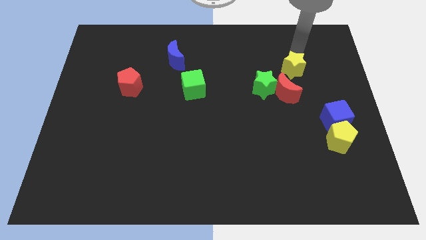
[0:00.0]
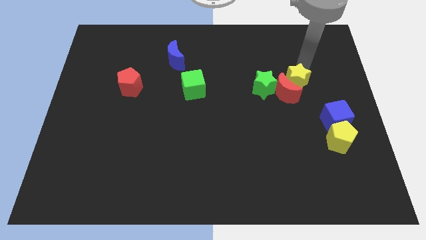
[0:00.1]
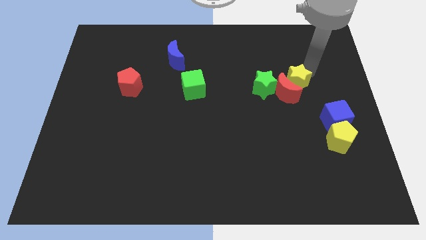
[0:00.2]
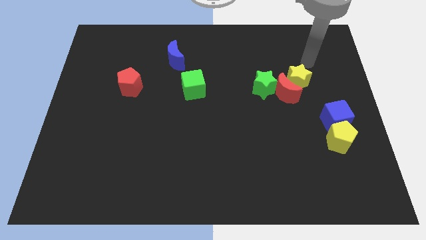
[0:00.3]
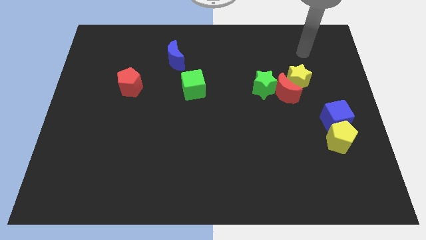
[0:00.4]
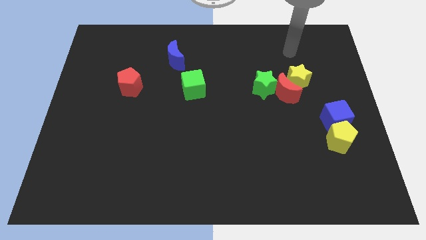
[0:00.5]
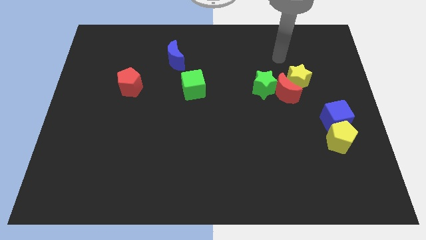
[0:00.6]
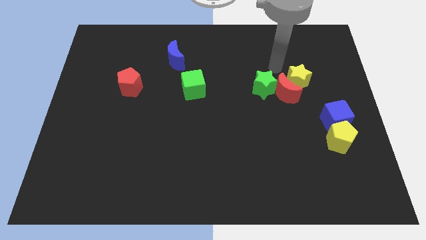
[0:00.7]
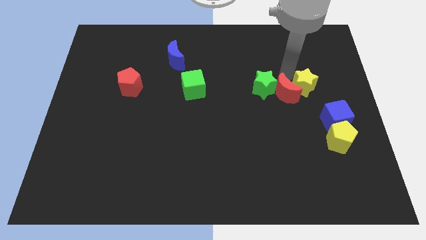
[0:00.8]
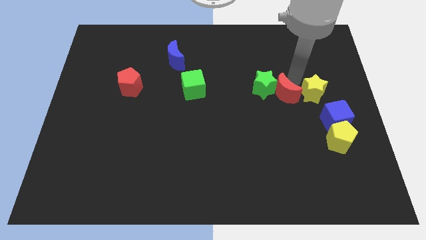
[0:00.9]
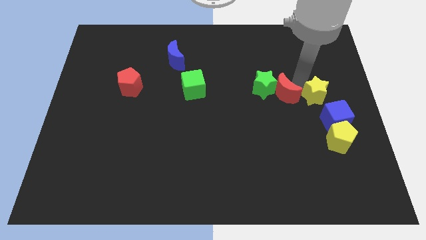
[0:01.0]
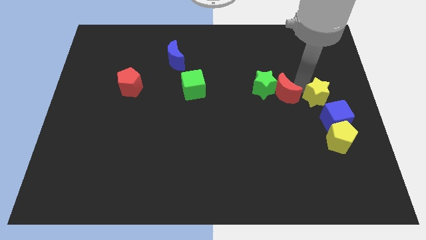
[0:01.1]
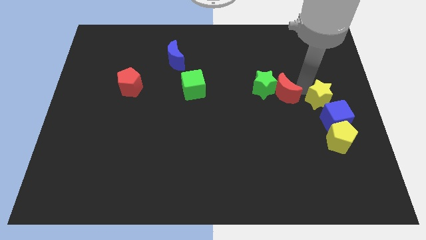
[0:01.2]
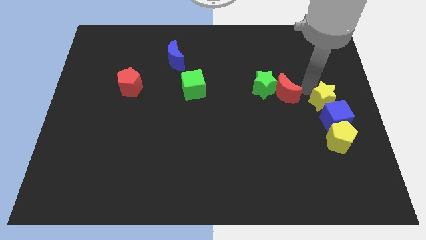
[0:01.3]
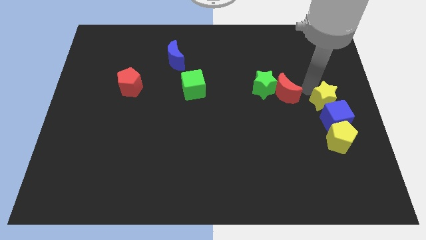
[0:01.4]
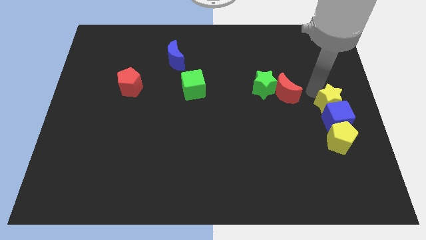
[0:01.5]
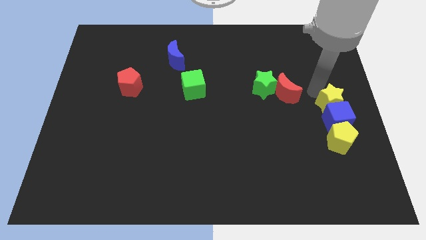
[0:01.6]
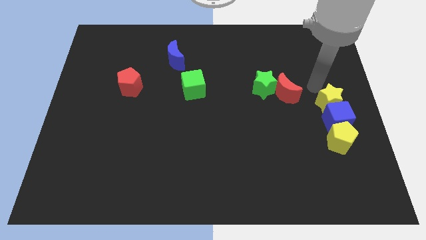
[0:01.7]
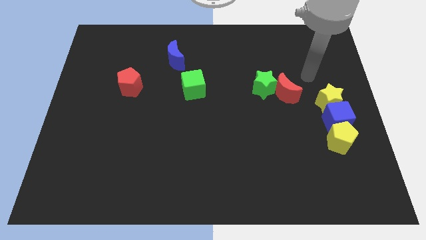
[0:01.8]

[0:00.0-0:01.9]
push the yellow star into blue cube

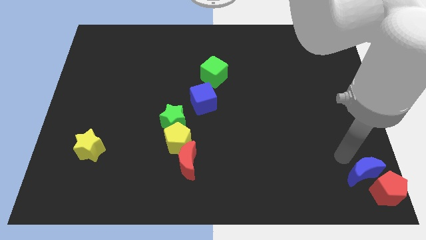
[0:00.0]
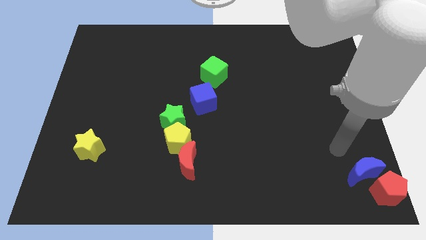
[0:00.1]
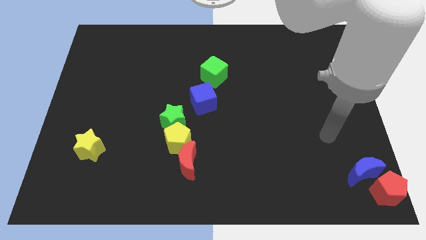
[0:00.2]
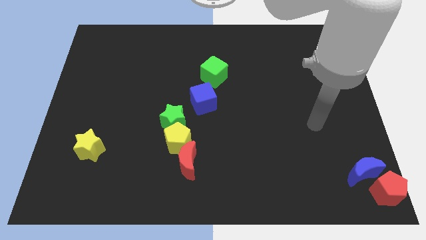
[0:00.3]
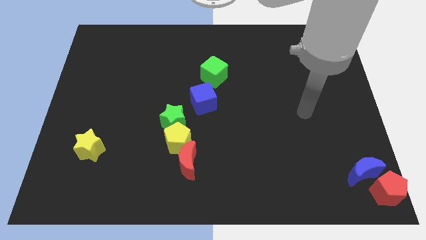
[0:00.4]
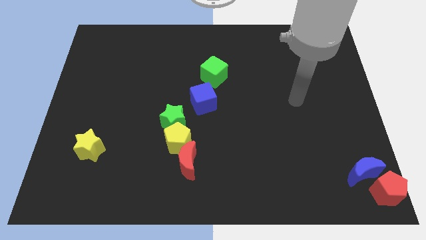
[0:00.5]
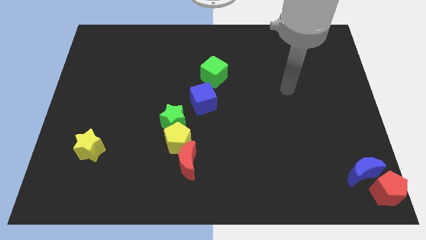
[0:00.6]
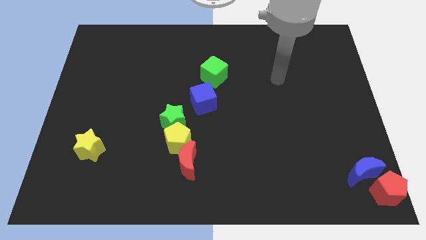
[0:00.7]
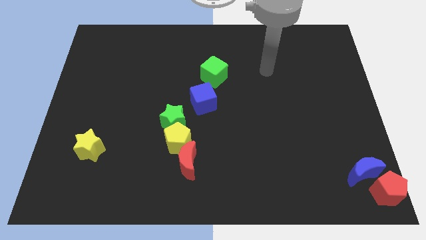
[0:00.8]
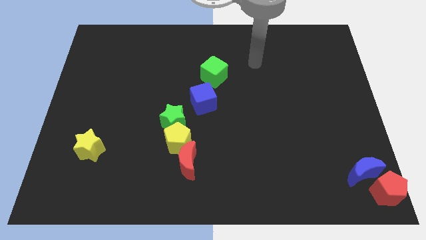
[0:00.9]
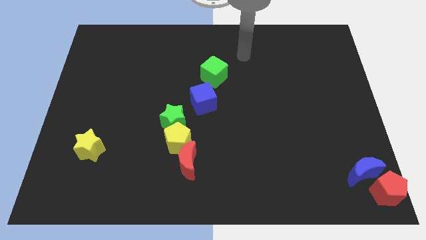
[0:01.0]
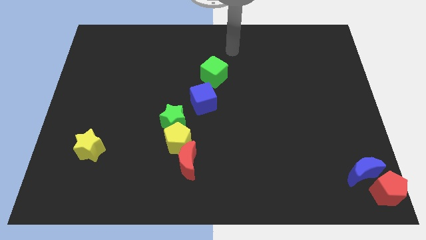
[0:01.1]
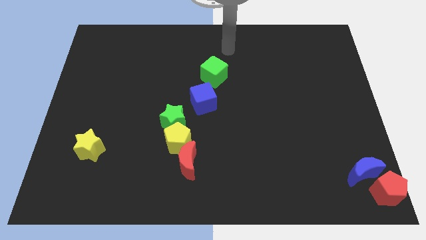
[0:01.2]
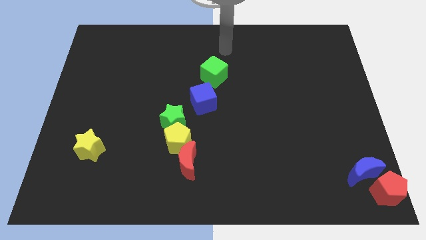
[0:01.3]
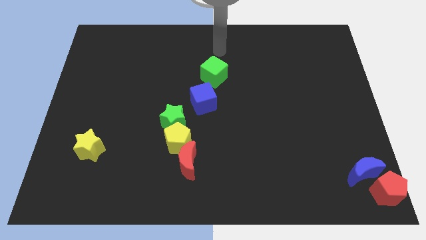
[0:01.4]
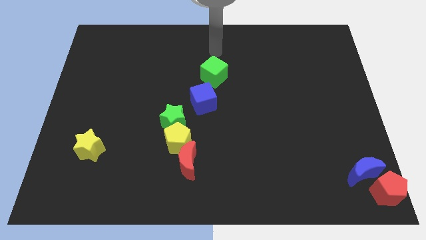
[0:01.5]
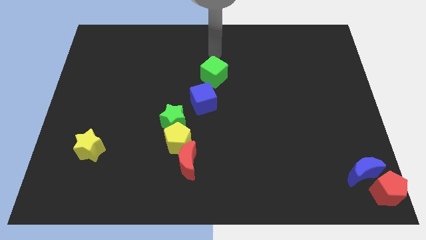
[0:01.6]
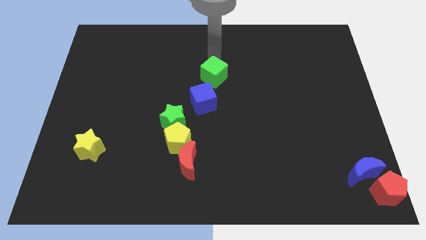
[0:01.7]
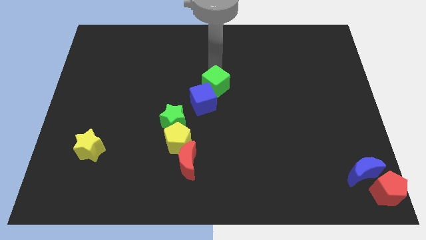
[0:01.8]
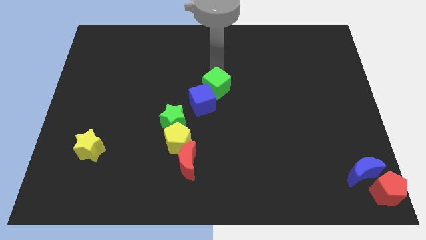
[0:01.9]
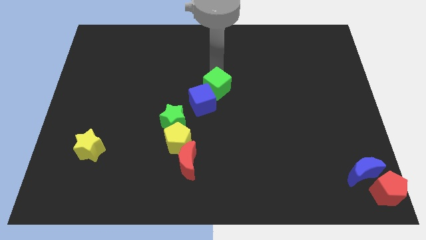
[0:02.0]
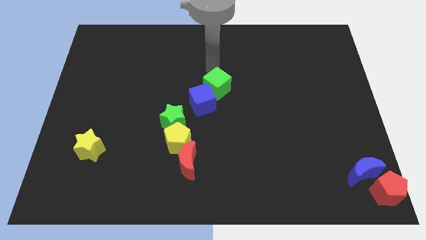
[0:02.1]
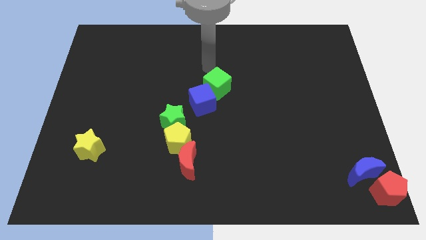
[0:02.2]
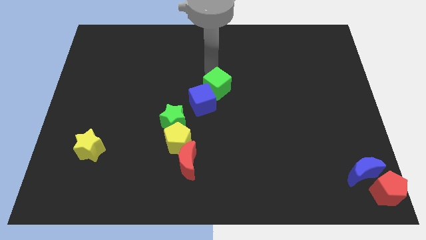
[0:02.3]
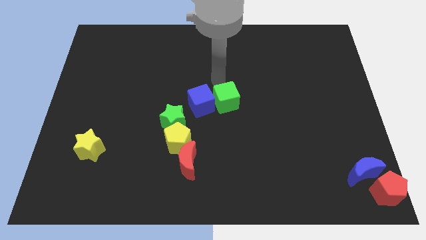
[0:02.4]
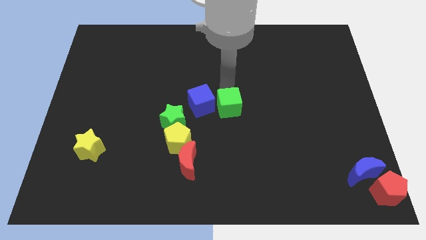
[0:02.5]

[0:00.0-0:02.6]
move green cube to the right of the blue cube

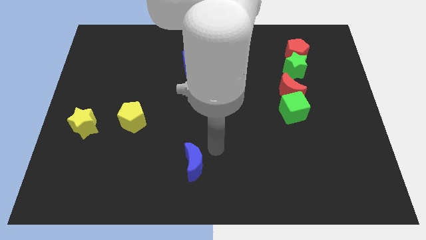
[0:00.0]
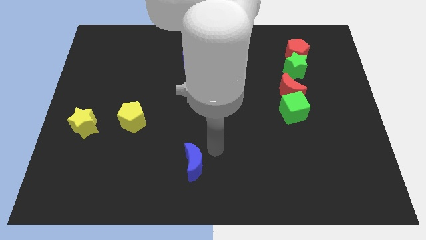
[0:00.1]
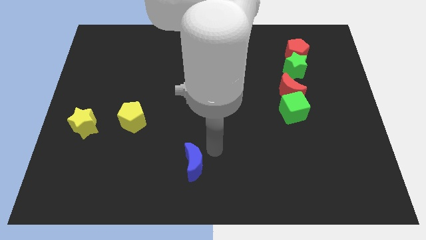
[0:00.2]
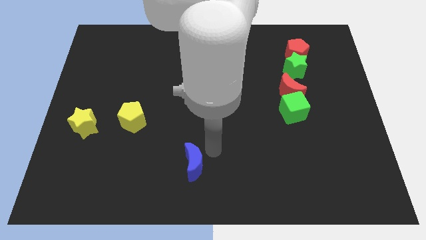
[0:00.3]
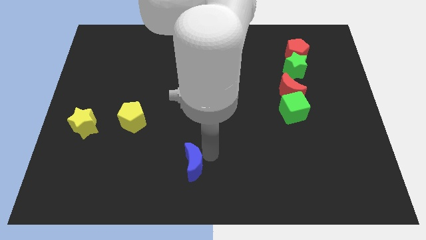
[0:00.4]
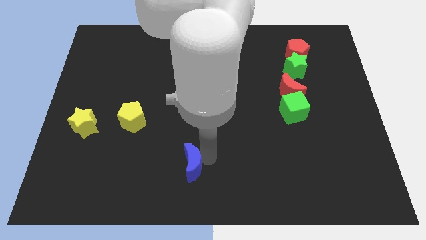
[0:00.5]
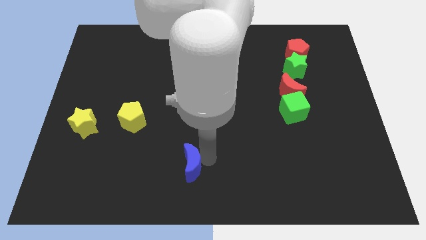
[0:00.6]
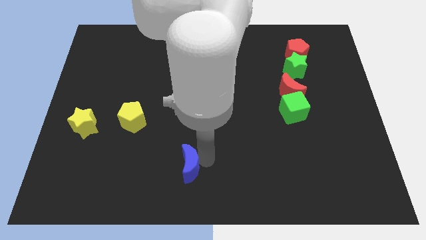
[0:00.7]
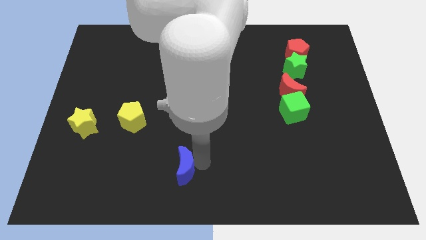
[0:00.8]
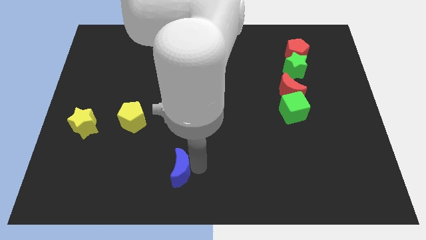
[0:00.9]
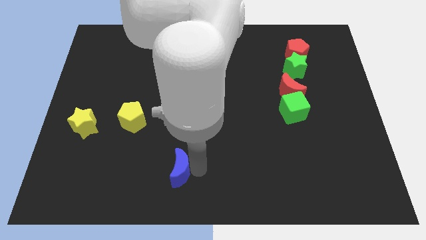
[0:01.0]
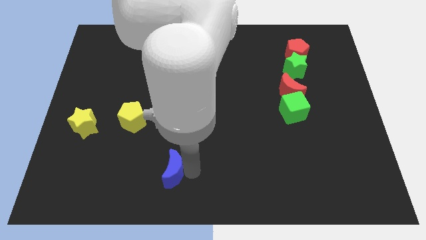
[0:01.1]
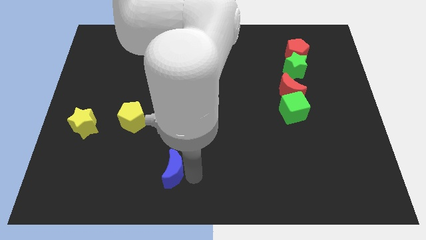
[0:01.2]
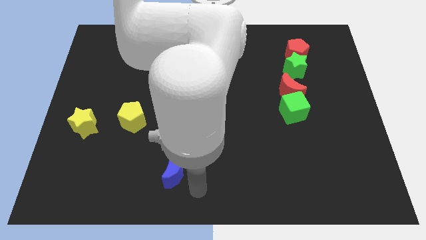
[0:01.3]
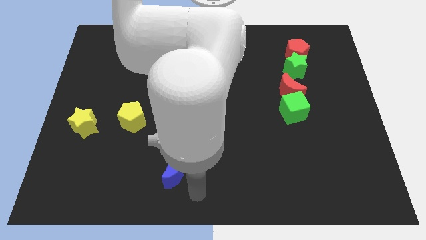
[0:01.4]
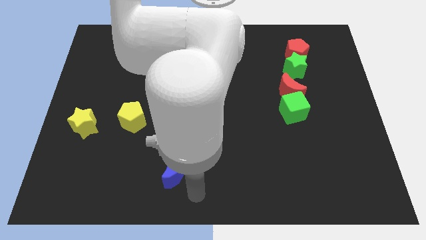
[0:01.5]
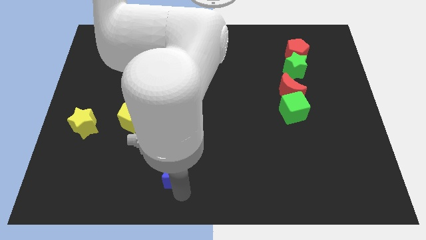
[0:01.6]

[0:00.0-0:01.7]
place the blue moon diagonal to the yellow pentagon

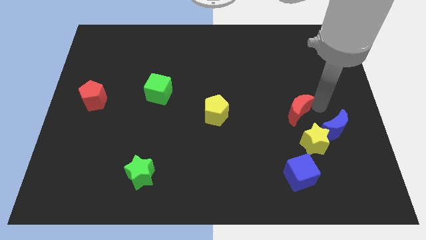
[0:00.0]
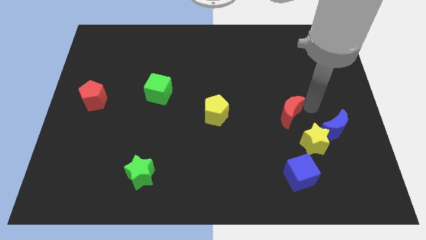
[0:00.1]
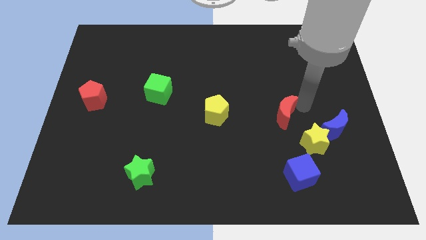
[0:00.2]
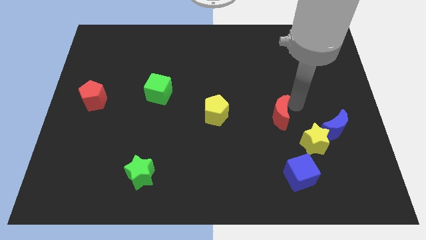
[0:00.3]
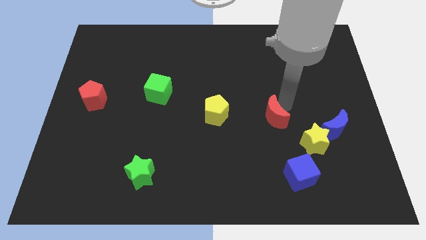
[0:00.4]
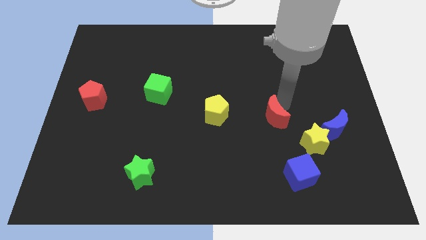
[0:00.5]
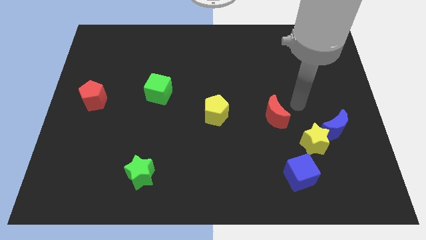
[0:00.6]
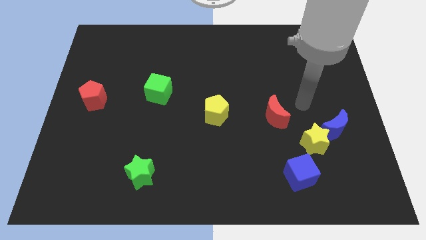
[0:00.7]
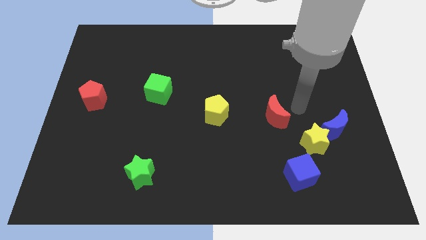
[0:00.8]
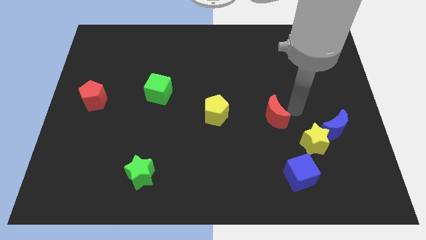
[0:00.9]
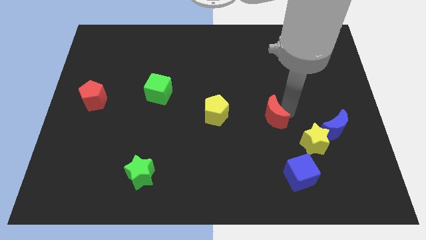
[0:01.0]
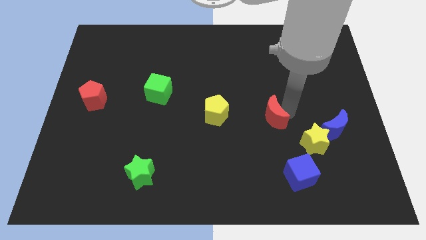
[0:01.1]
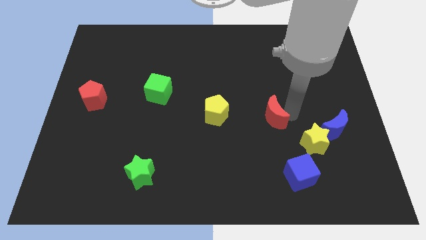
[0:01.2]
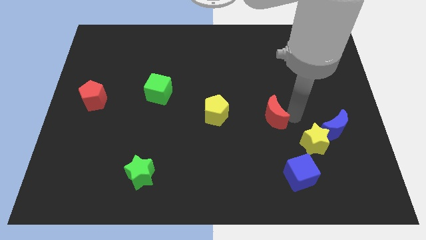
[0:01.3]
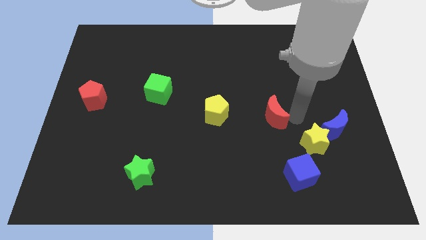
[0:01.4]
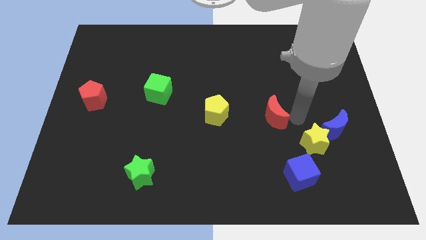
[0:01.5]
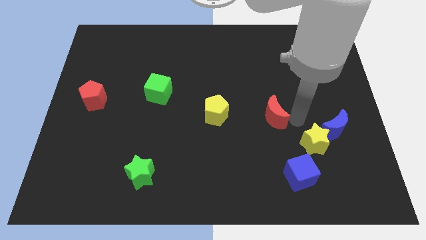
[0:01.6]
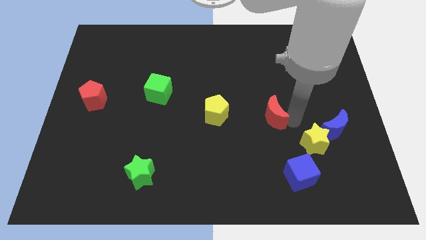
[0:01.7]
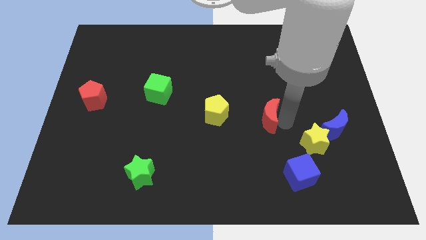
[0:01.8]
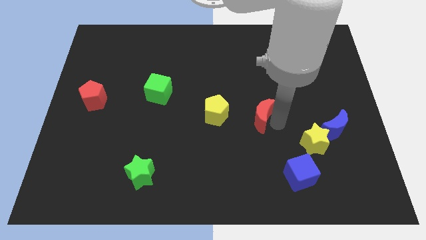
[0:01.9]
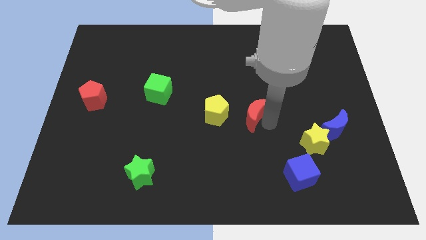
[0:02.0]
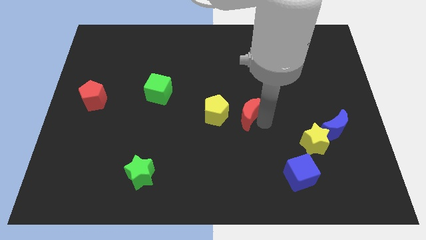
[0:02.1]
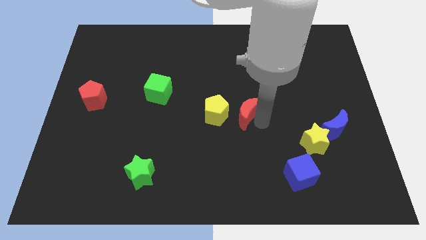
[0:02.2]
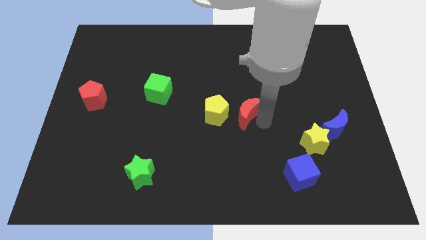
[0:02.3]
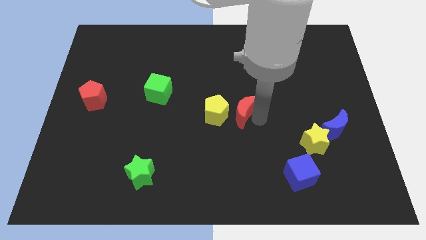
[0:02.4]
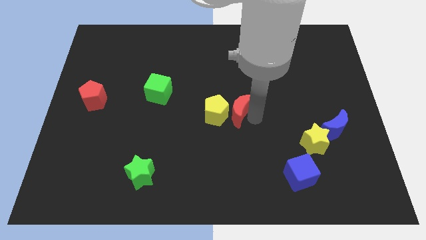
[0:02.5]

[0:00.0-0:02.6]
put the red crescent beside the yellow pentagon

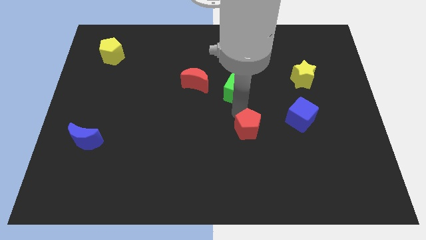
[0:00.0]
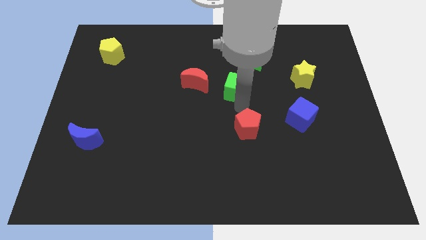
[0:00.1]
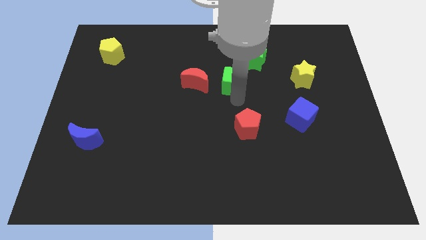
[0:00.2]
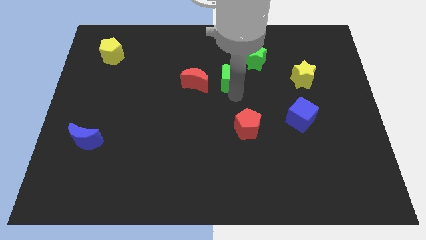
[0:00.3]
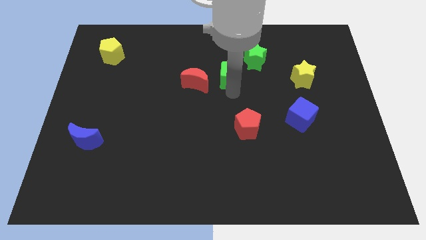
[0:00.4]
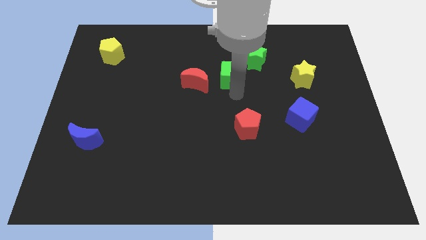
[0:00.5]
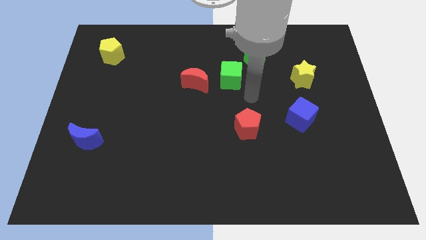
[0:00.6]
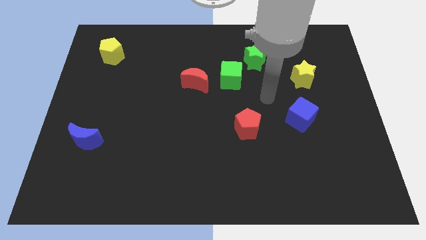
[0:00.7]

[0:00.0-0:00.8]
push green cube slightly towards top
